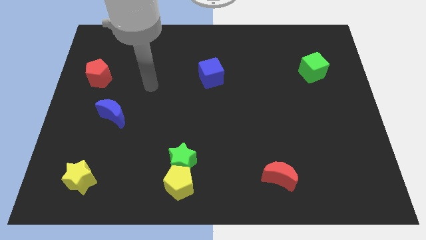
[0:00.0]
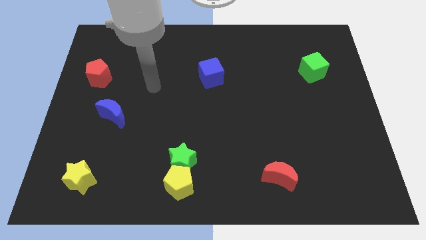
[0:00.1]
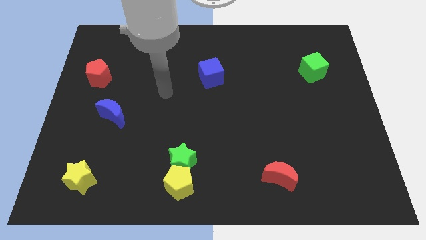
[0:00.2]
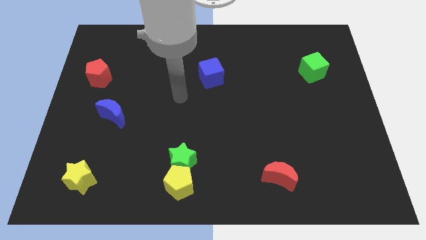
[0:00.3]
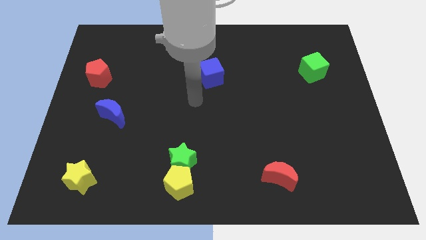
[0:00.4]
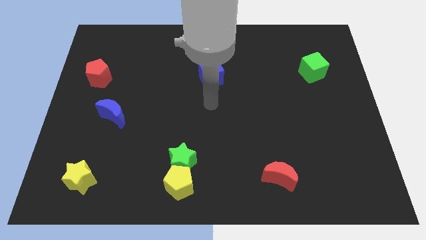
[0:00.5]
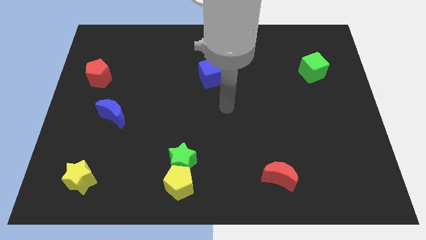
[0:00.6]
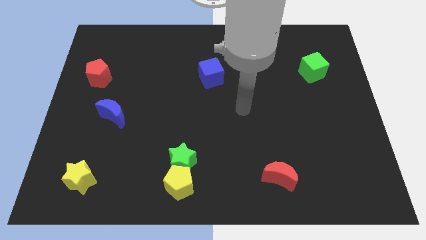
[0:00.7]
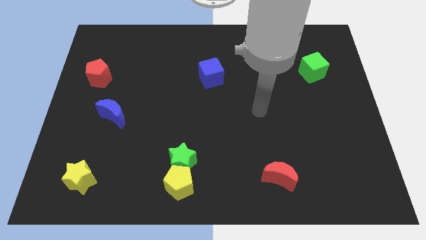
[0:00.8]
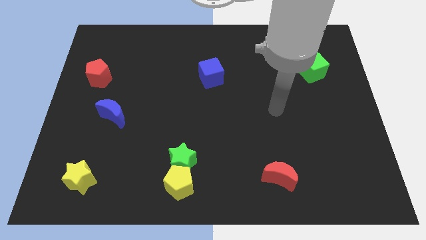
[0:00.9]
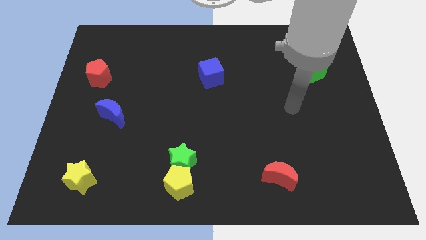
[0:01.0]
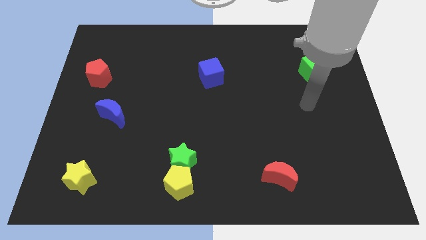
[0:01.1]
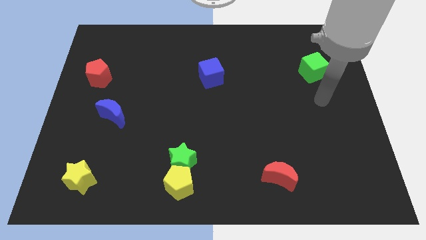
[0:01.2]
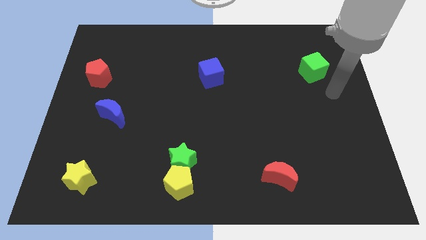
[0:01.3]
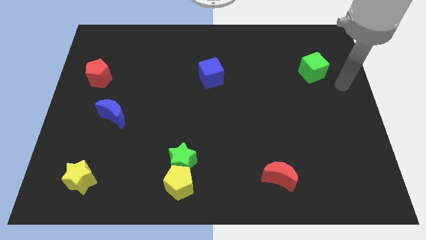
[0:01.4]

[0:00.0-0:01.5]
move the arm to the top right side of the green cube

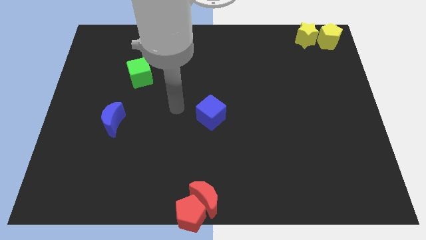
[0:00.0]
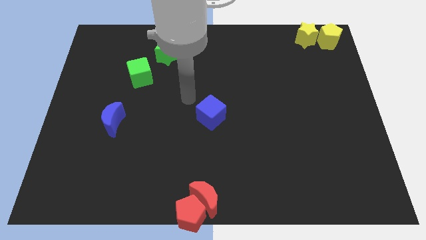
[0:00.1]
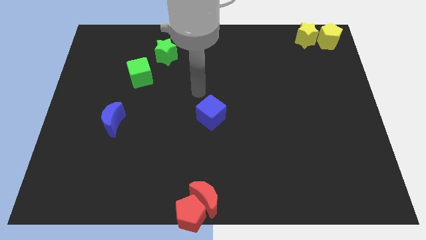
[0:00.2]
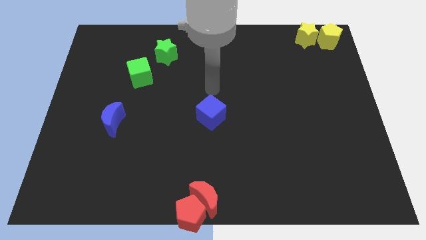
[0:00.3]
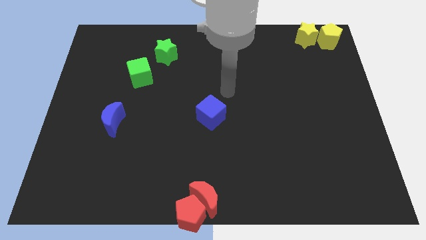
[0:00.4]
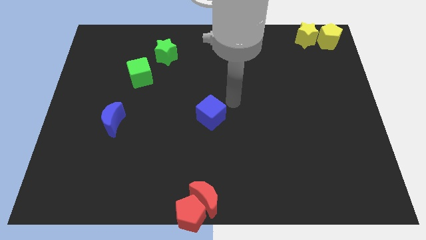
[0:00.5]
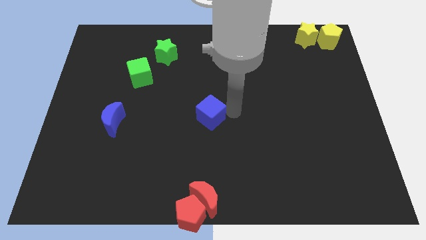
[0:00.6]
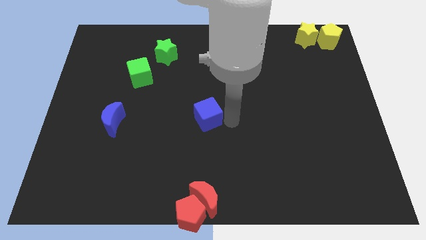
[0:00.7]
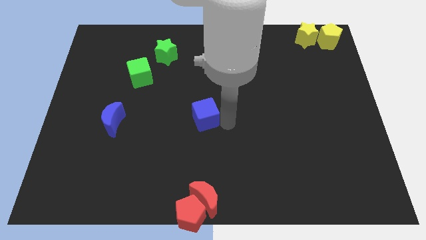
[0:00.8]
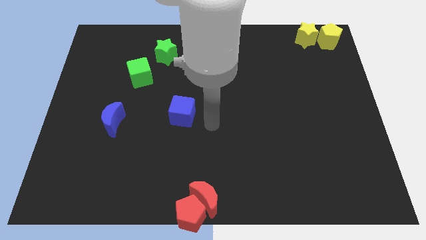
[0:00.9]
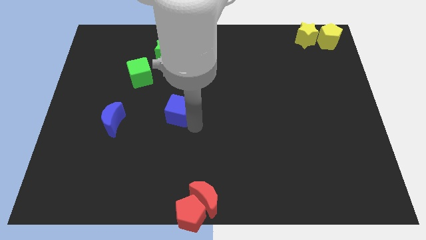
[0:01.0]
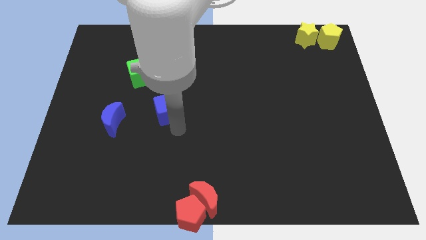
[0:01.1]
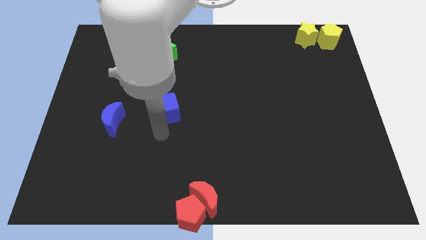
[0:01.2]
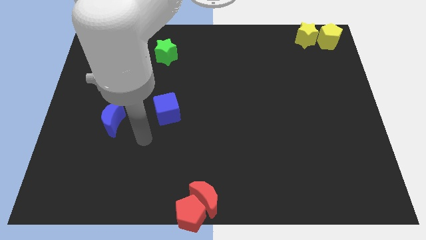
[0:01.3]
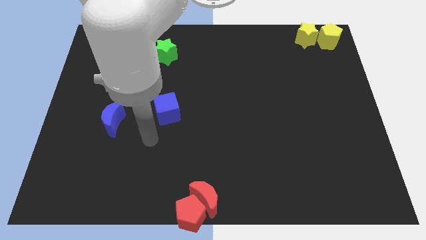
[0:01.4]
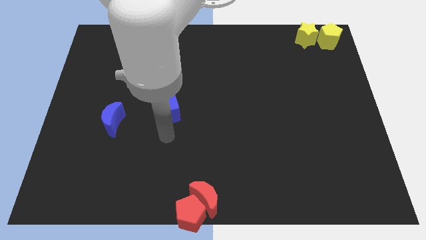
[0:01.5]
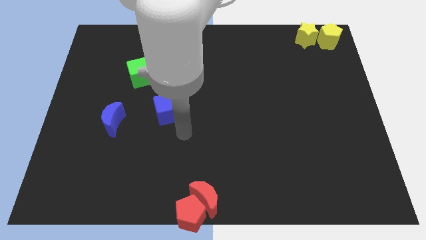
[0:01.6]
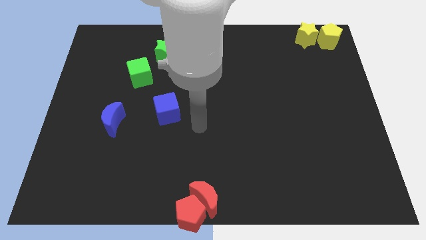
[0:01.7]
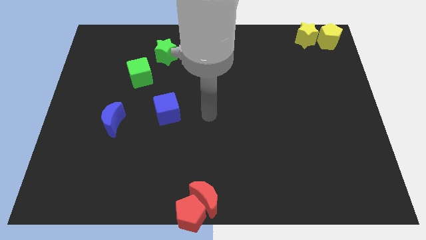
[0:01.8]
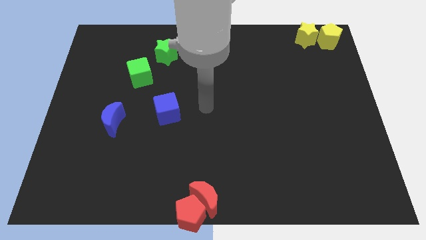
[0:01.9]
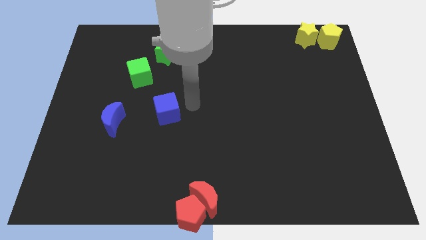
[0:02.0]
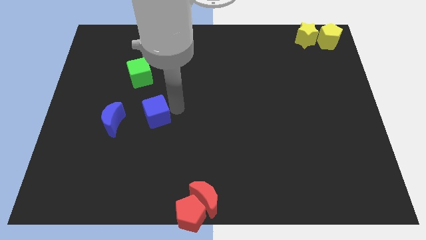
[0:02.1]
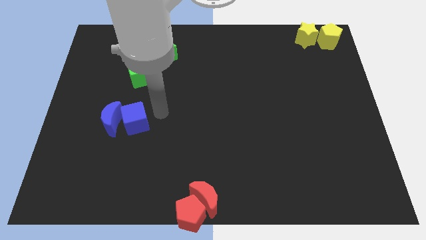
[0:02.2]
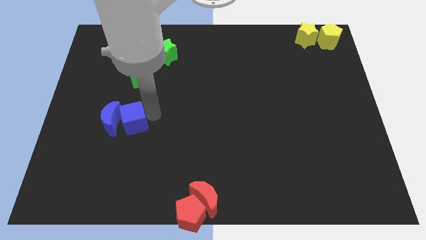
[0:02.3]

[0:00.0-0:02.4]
move the blue cube to the bottom side of the green cube

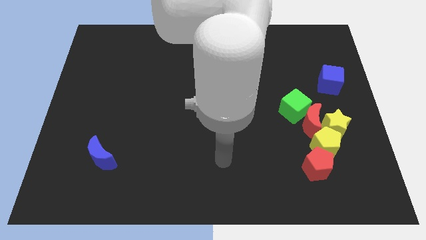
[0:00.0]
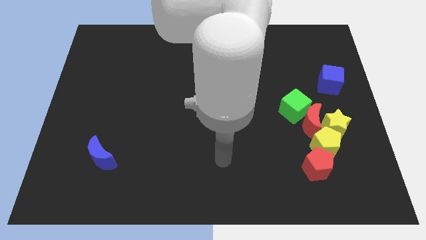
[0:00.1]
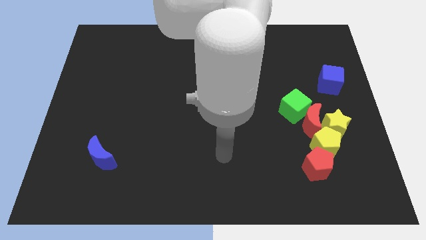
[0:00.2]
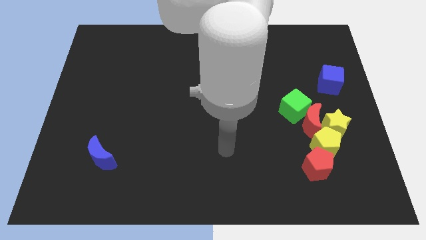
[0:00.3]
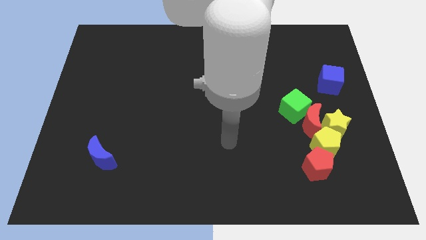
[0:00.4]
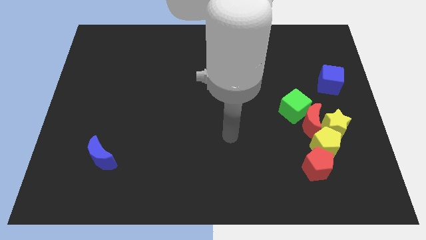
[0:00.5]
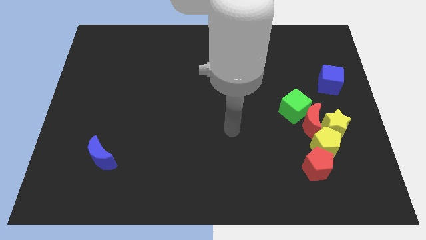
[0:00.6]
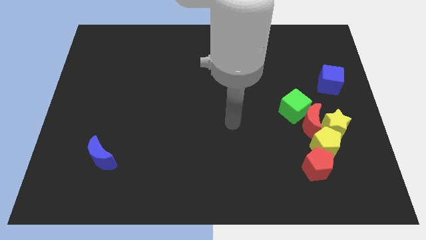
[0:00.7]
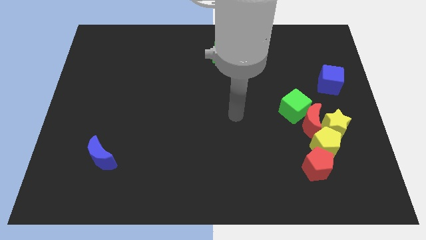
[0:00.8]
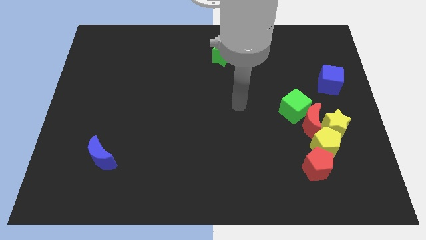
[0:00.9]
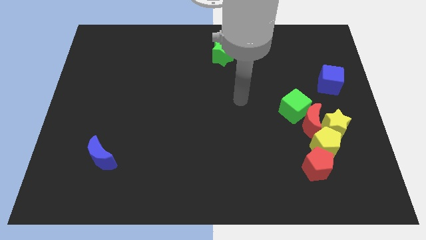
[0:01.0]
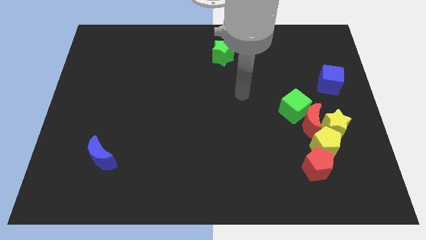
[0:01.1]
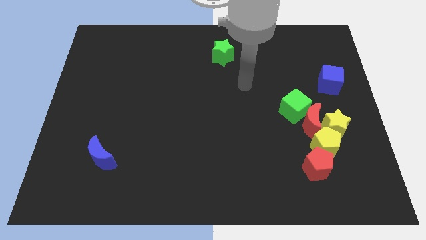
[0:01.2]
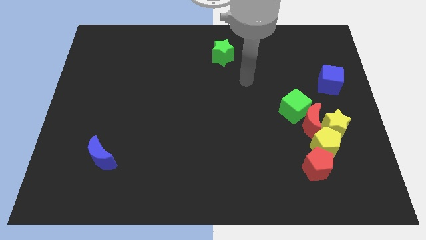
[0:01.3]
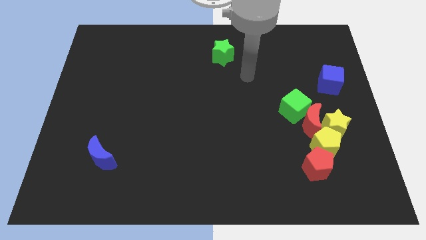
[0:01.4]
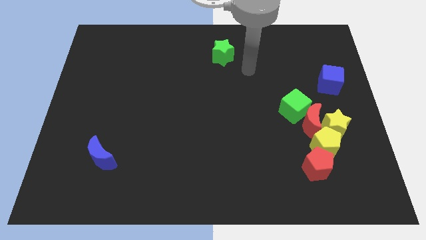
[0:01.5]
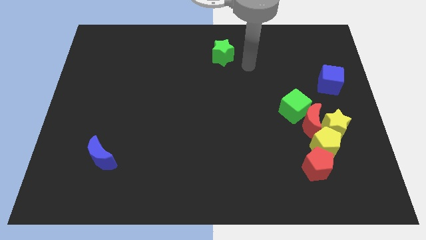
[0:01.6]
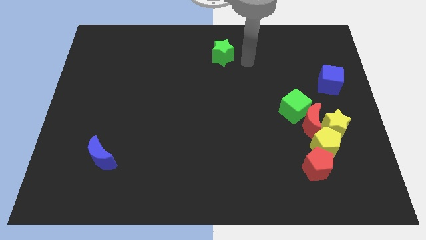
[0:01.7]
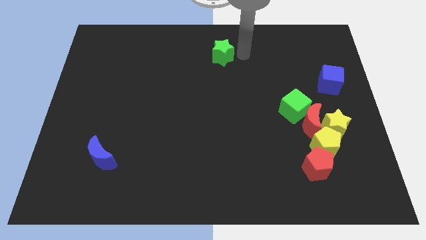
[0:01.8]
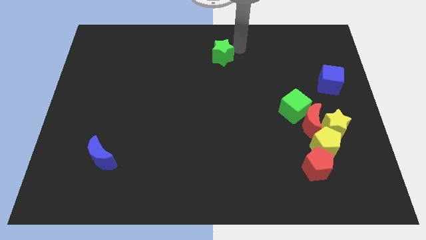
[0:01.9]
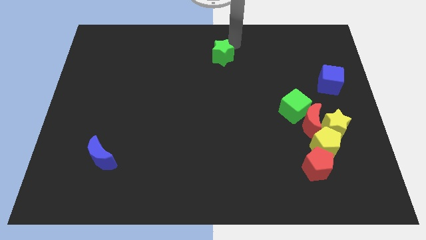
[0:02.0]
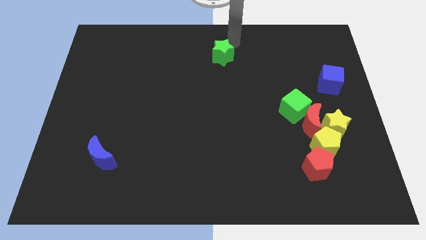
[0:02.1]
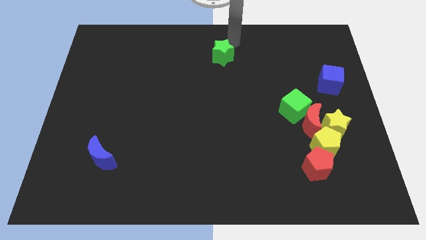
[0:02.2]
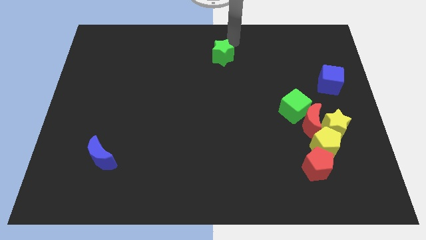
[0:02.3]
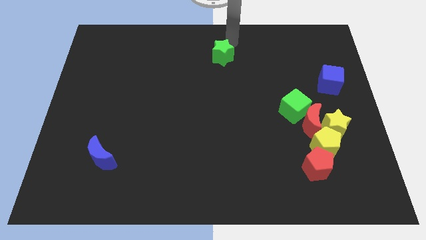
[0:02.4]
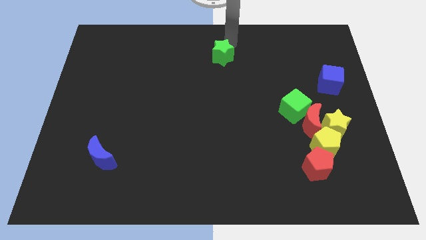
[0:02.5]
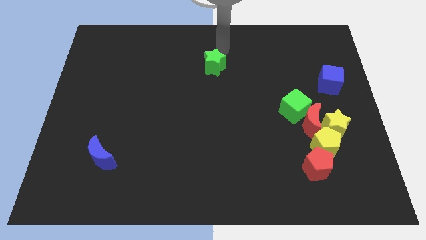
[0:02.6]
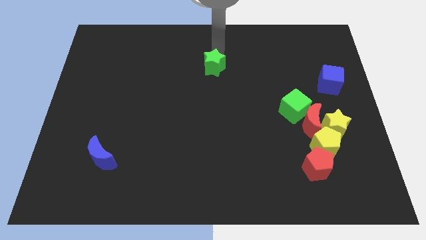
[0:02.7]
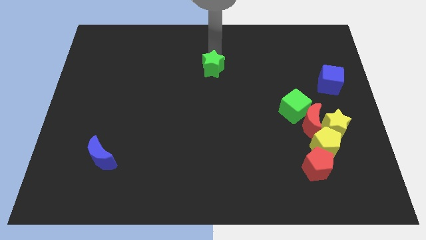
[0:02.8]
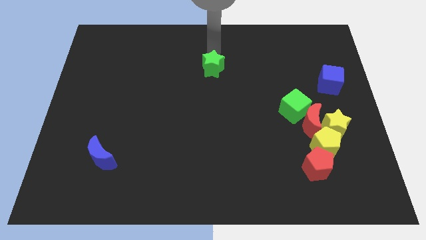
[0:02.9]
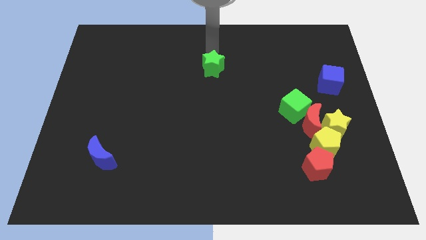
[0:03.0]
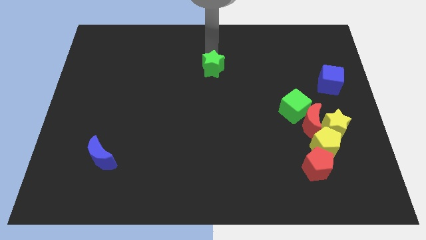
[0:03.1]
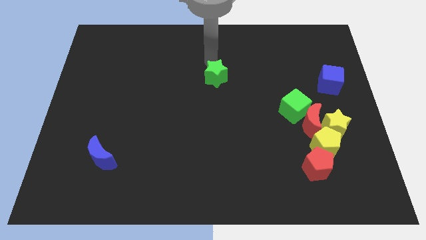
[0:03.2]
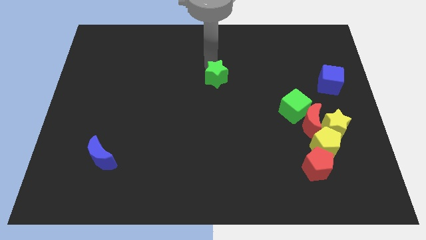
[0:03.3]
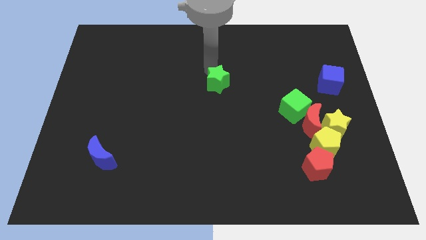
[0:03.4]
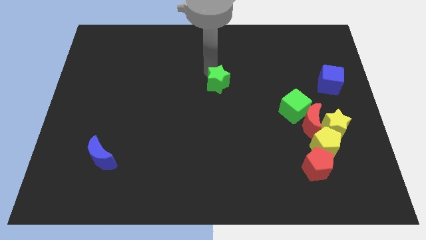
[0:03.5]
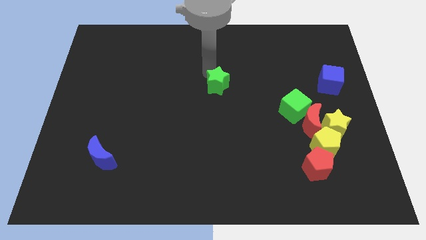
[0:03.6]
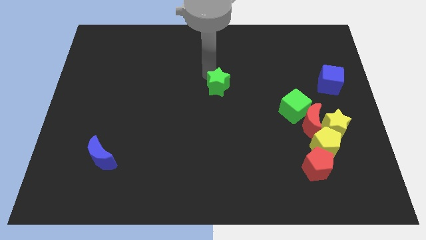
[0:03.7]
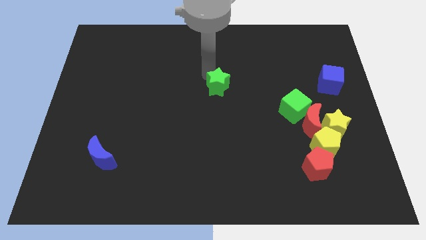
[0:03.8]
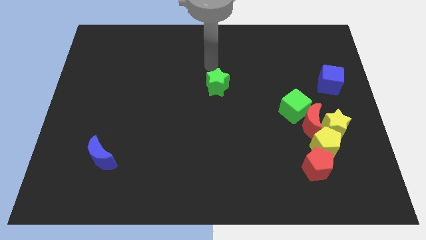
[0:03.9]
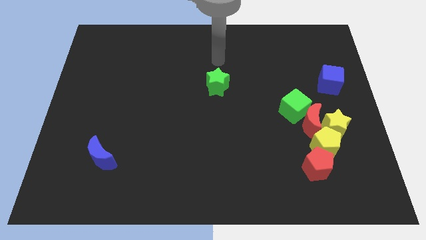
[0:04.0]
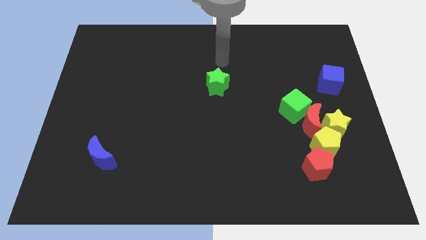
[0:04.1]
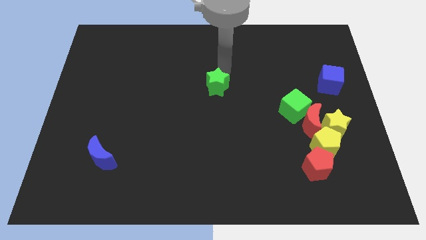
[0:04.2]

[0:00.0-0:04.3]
push the green star towards the center of the board

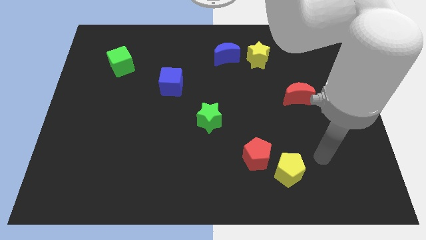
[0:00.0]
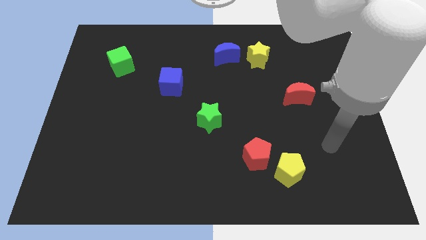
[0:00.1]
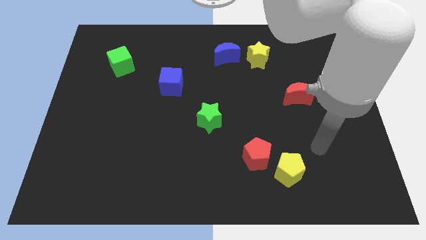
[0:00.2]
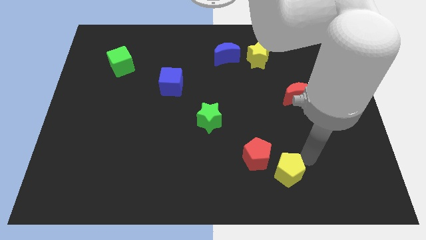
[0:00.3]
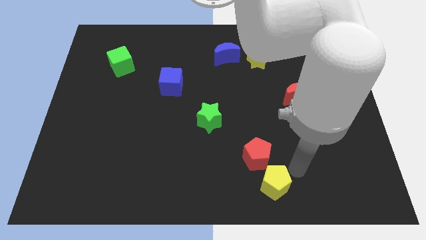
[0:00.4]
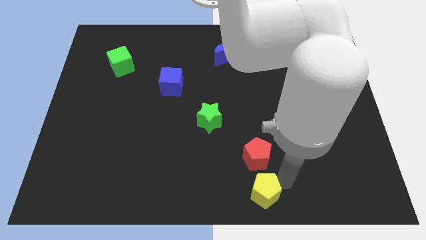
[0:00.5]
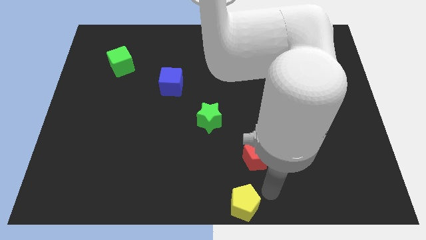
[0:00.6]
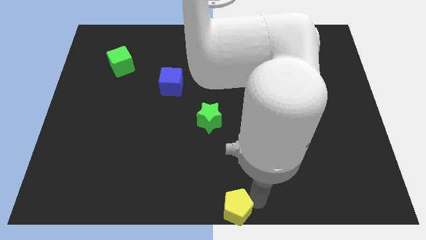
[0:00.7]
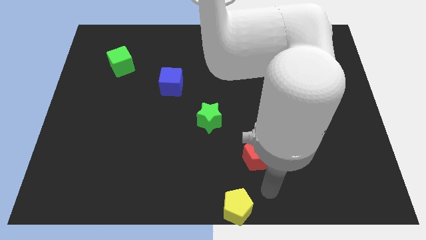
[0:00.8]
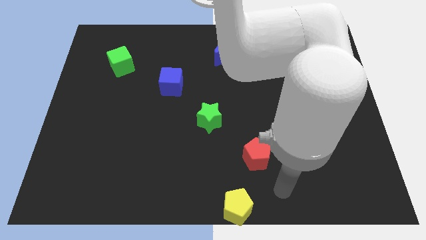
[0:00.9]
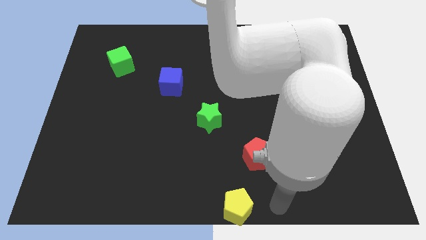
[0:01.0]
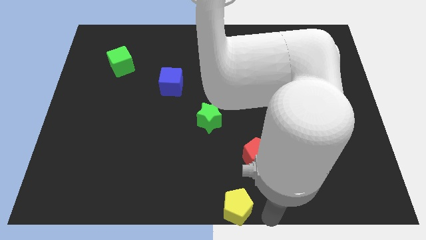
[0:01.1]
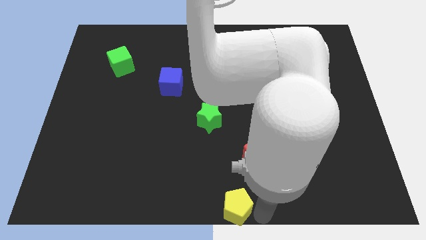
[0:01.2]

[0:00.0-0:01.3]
move the yellow pentagon away from the red pentagon
